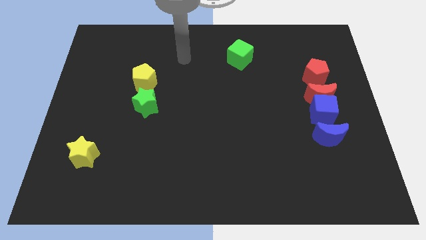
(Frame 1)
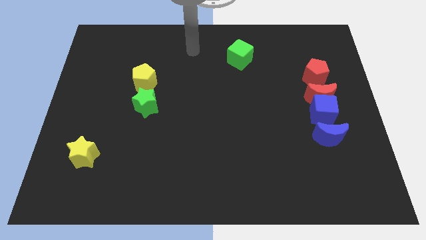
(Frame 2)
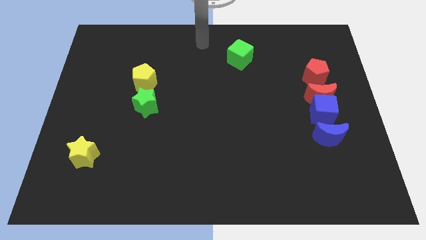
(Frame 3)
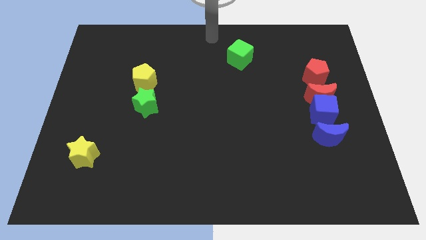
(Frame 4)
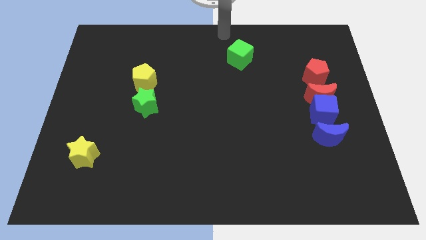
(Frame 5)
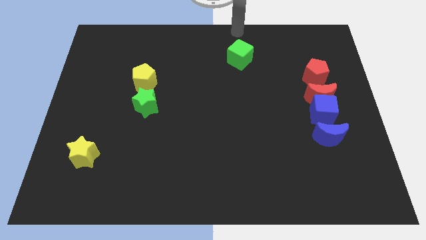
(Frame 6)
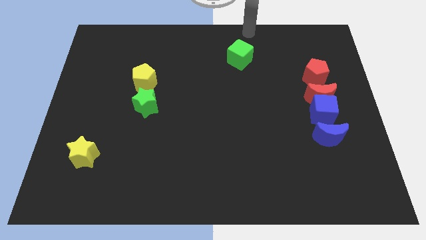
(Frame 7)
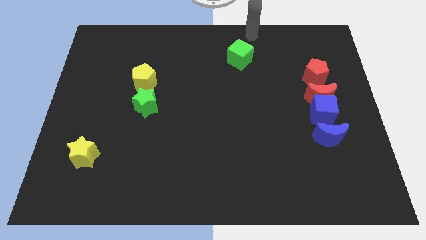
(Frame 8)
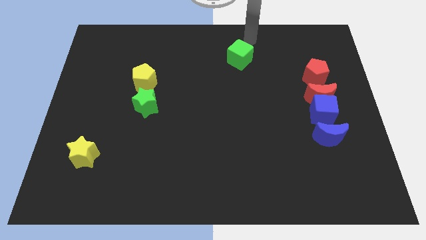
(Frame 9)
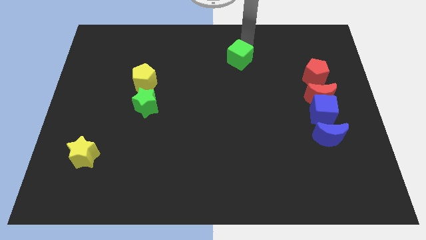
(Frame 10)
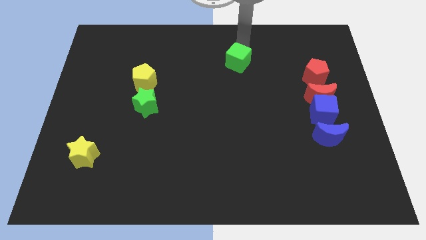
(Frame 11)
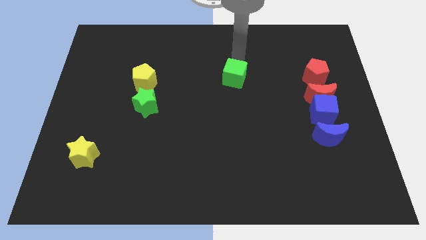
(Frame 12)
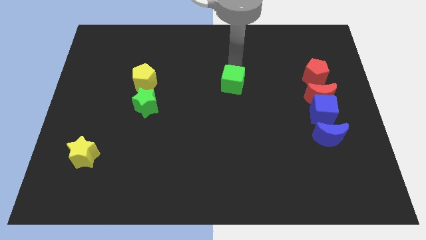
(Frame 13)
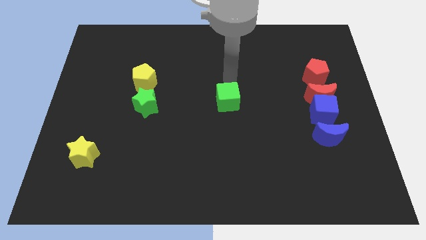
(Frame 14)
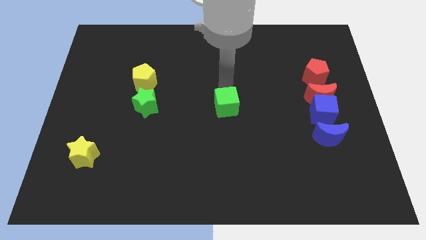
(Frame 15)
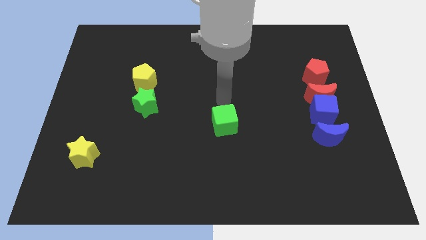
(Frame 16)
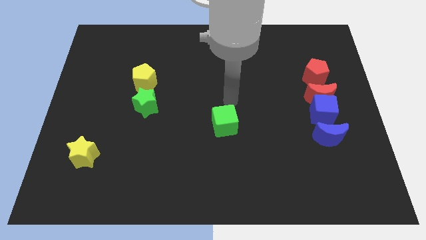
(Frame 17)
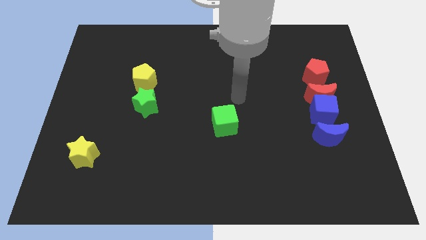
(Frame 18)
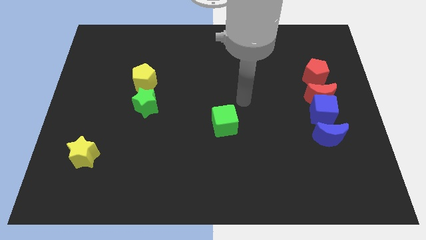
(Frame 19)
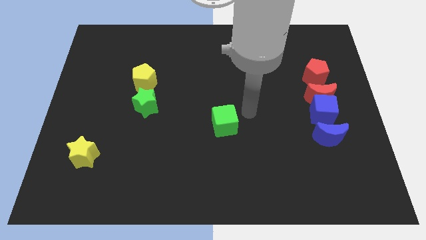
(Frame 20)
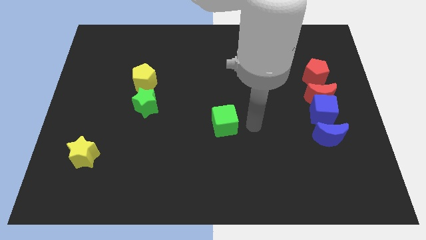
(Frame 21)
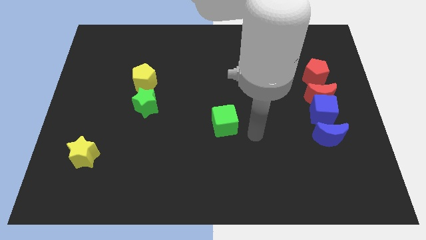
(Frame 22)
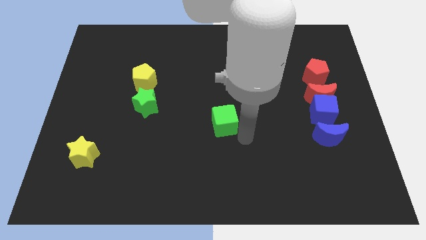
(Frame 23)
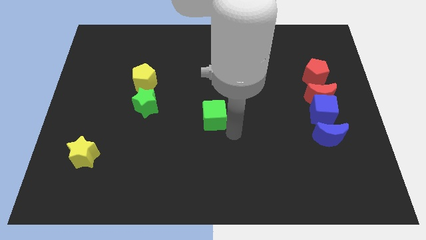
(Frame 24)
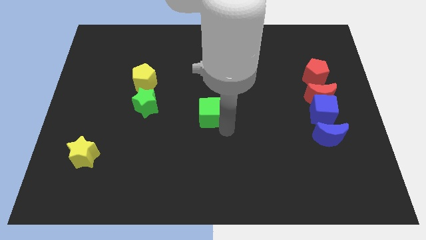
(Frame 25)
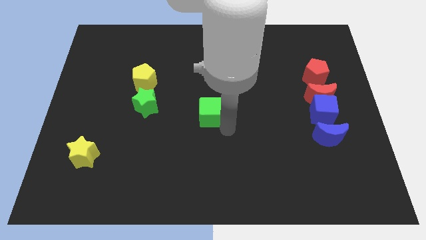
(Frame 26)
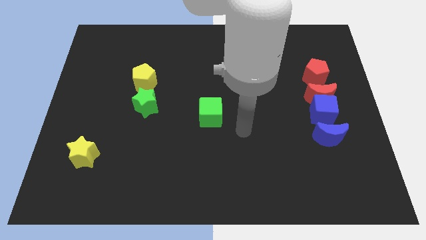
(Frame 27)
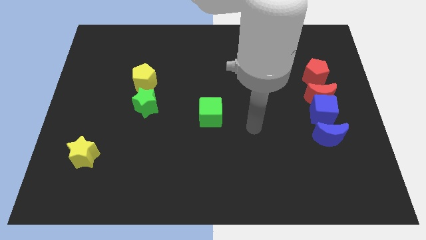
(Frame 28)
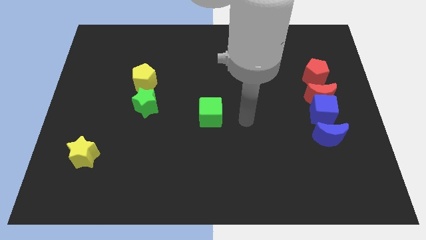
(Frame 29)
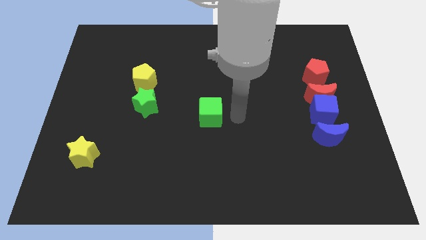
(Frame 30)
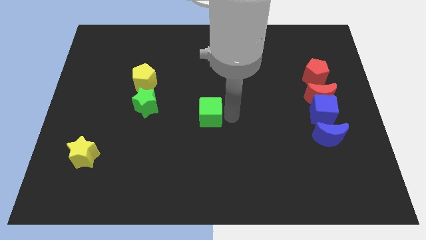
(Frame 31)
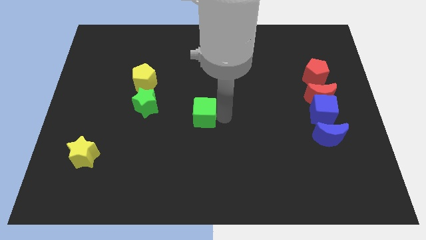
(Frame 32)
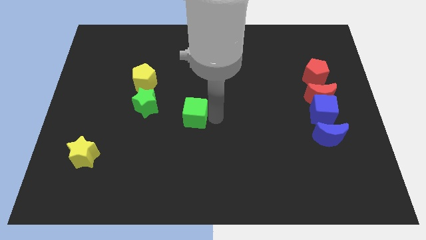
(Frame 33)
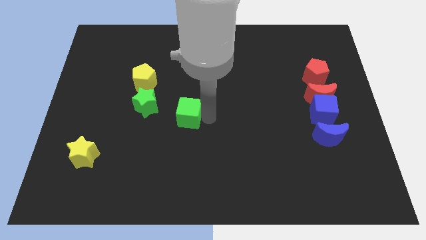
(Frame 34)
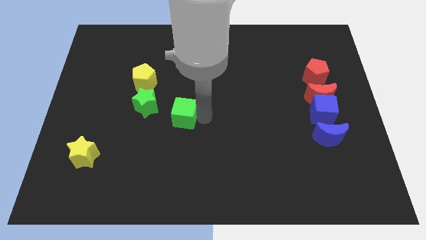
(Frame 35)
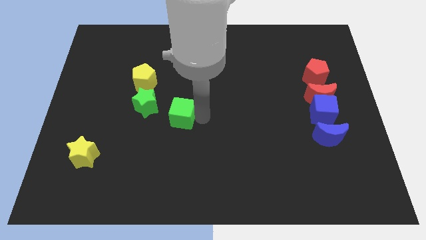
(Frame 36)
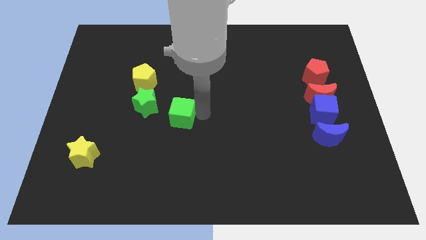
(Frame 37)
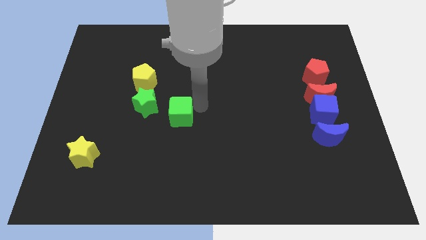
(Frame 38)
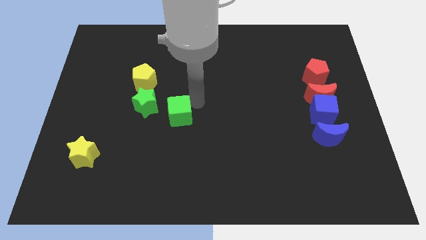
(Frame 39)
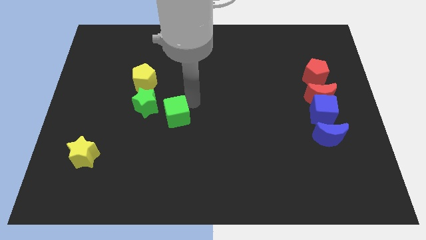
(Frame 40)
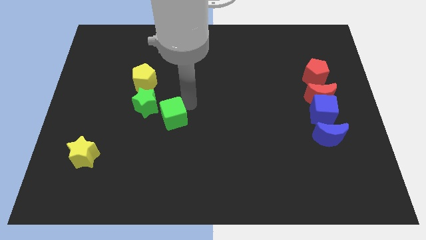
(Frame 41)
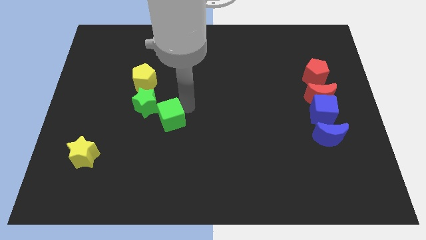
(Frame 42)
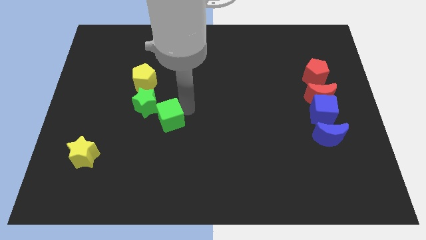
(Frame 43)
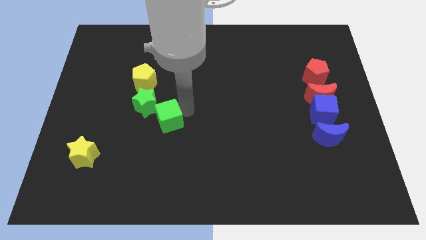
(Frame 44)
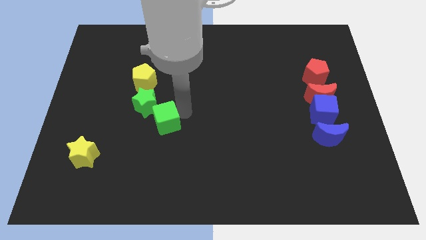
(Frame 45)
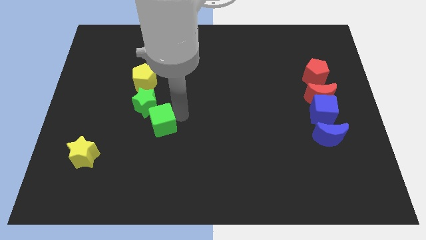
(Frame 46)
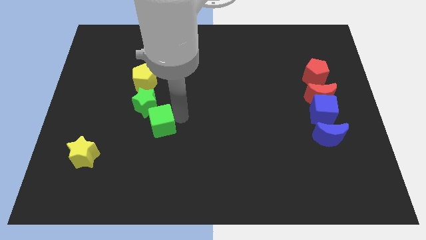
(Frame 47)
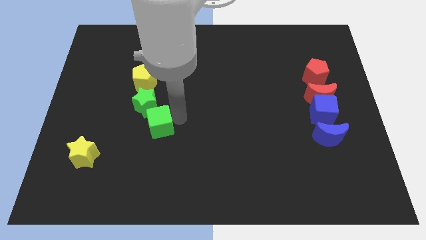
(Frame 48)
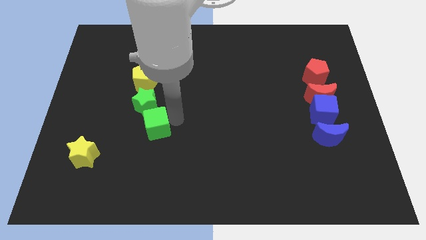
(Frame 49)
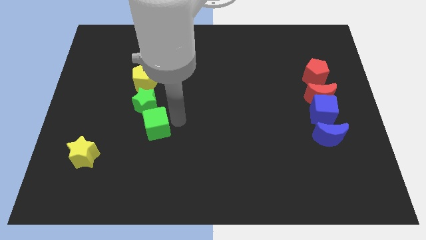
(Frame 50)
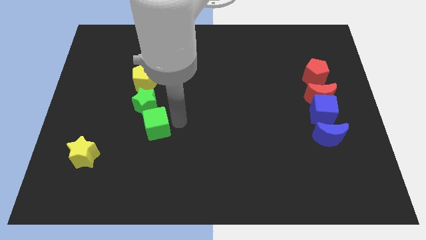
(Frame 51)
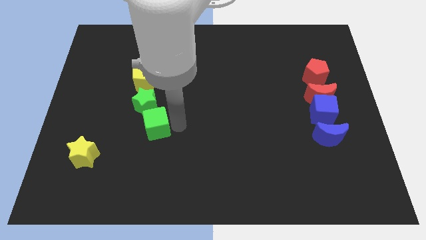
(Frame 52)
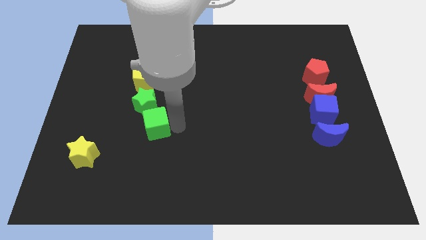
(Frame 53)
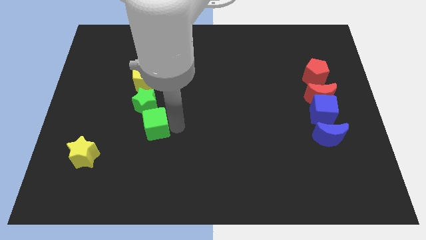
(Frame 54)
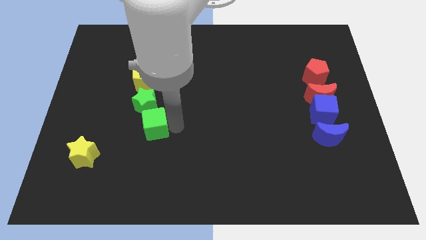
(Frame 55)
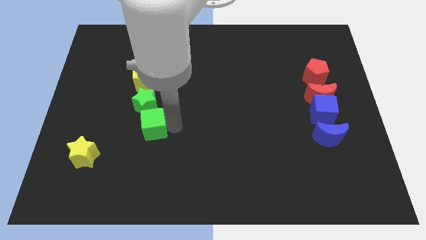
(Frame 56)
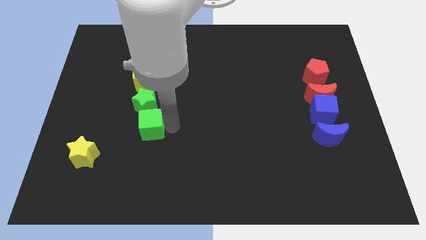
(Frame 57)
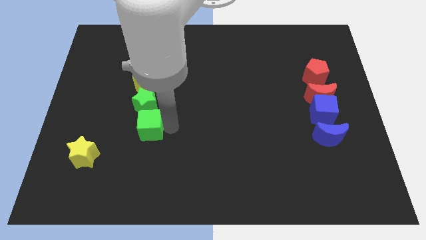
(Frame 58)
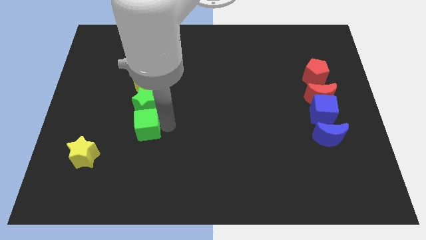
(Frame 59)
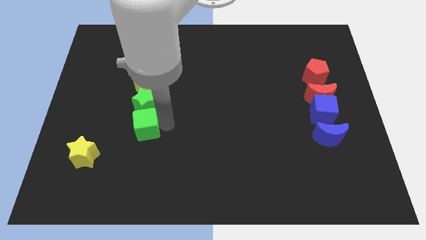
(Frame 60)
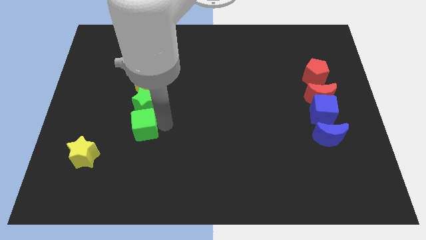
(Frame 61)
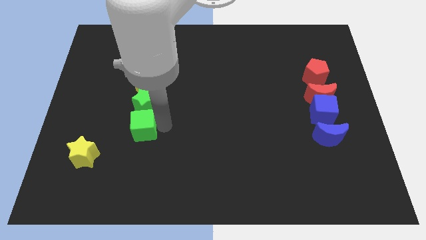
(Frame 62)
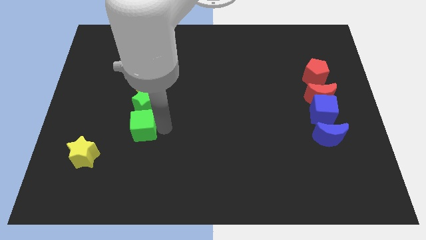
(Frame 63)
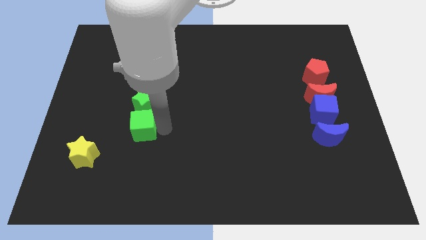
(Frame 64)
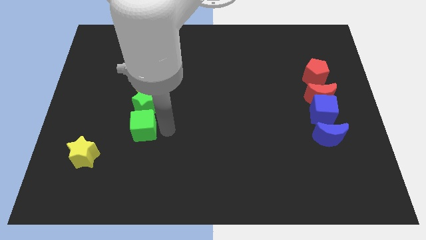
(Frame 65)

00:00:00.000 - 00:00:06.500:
put the green cube below the green star

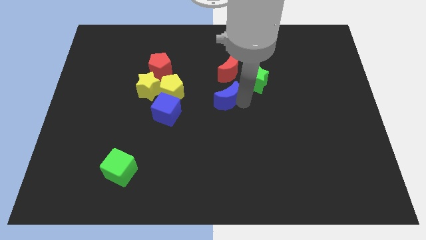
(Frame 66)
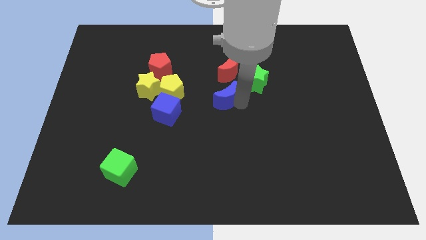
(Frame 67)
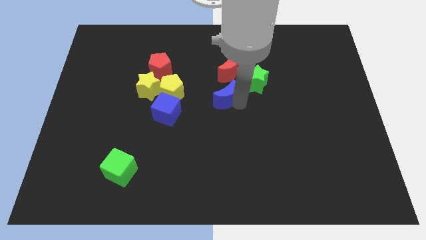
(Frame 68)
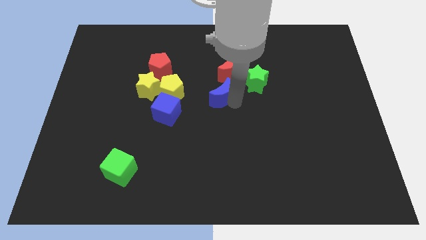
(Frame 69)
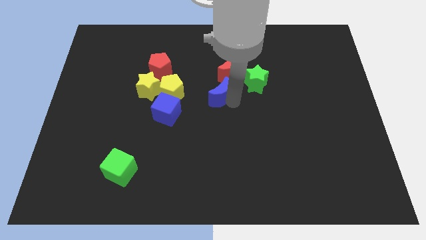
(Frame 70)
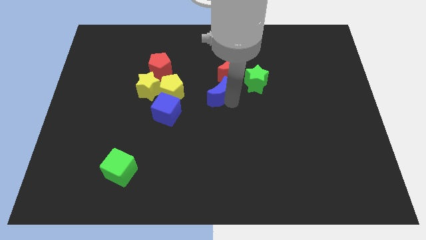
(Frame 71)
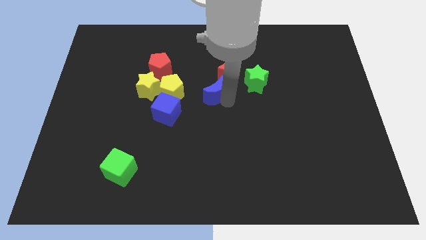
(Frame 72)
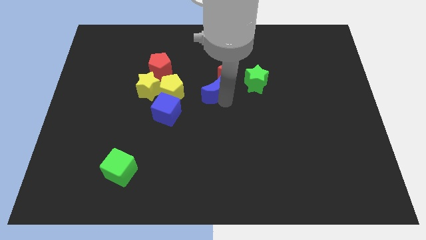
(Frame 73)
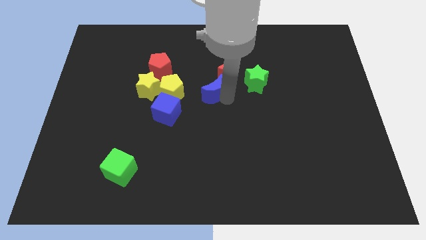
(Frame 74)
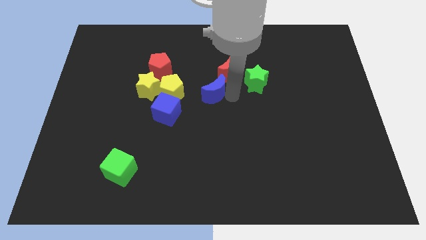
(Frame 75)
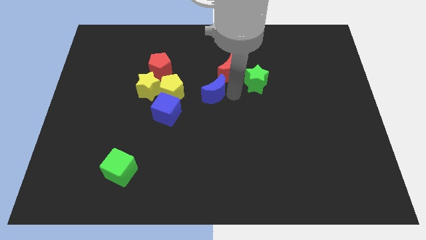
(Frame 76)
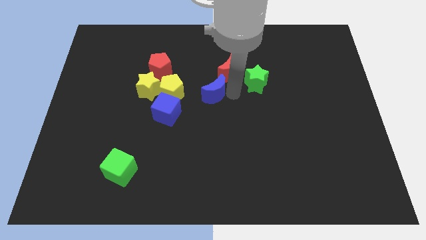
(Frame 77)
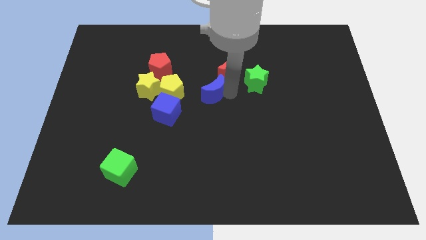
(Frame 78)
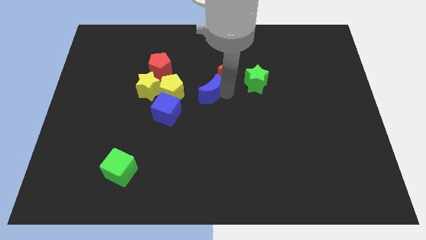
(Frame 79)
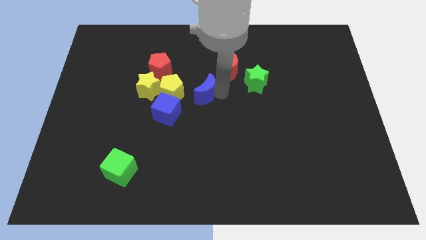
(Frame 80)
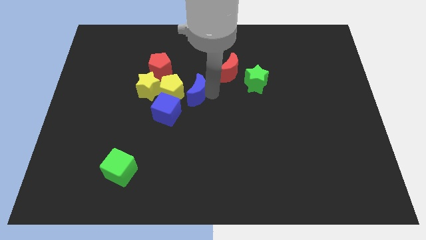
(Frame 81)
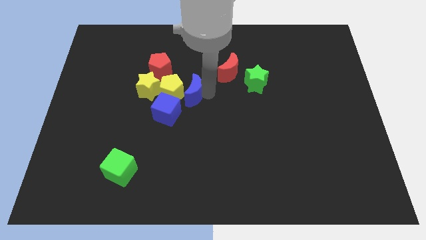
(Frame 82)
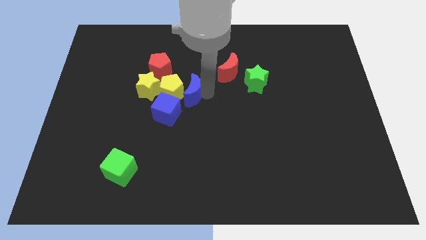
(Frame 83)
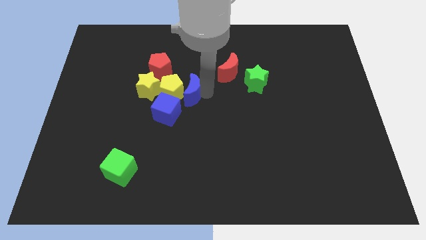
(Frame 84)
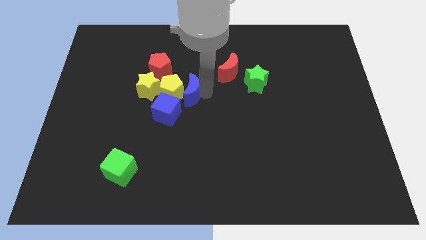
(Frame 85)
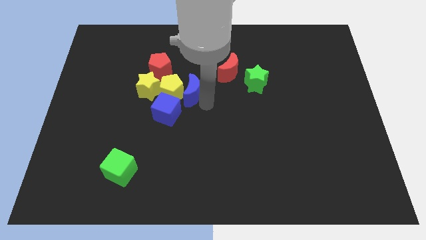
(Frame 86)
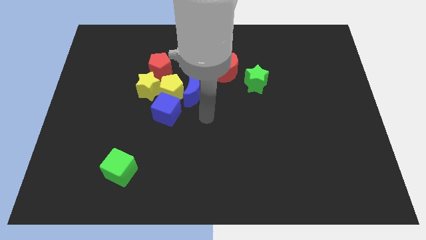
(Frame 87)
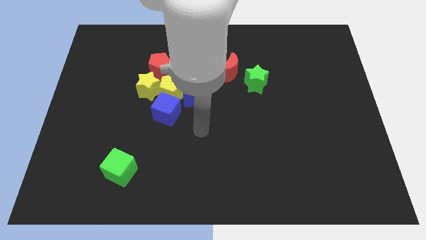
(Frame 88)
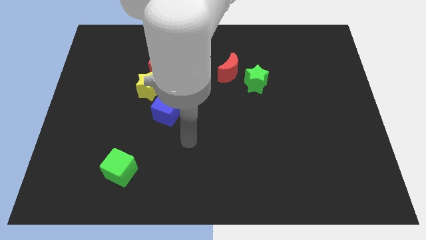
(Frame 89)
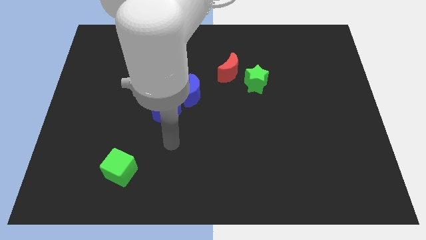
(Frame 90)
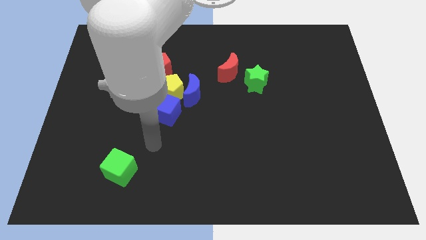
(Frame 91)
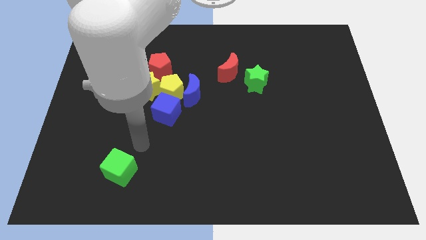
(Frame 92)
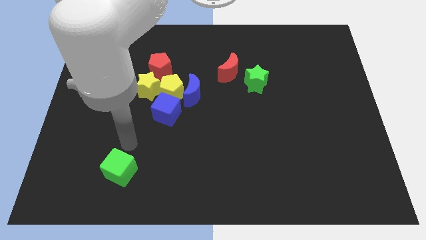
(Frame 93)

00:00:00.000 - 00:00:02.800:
move blue moon into group of blocks
